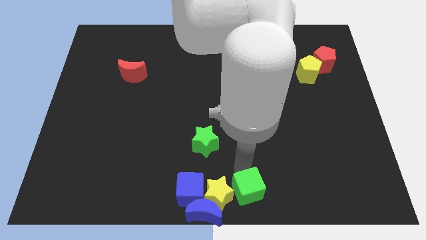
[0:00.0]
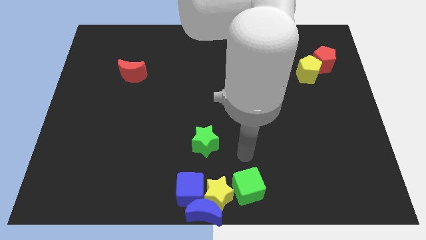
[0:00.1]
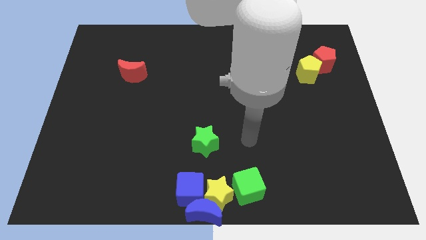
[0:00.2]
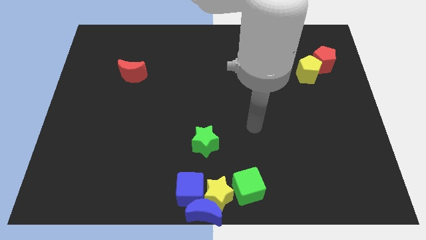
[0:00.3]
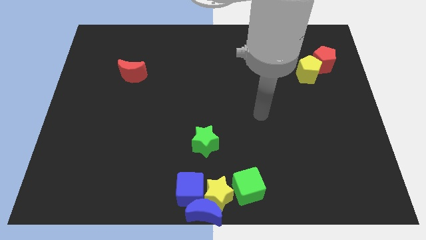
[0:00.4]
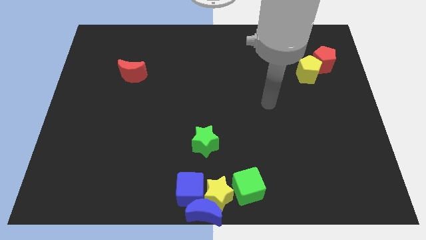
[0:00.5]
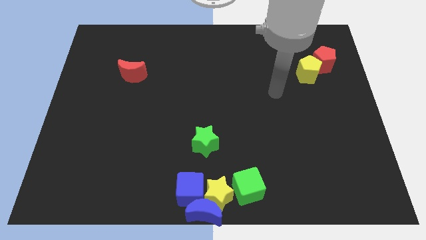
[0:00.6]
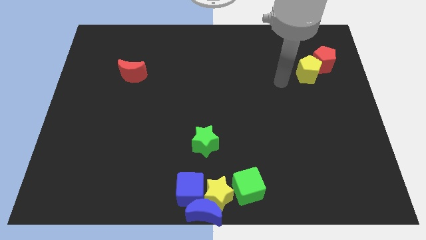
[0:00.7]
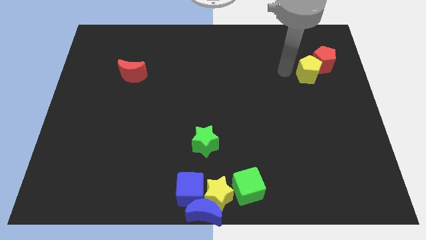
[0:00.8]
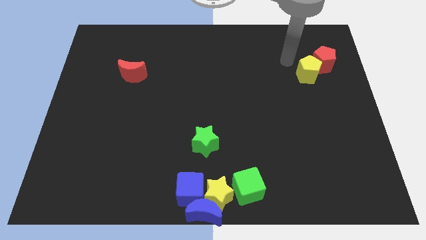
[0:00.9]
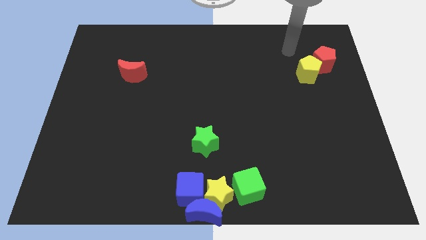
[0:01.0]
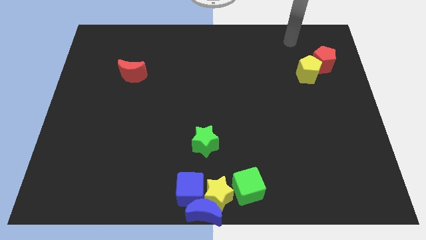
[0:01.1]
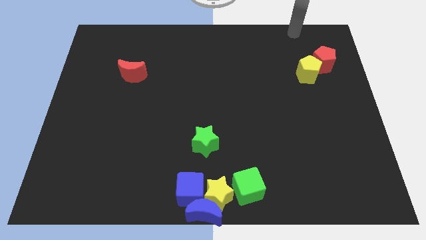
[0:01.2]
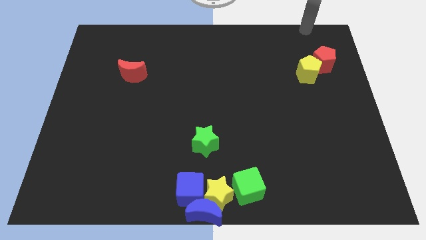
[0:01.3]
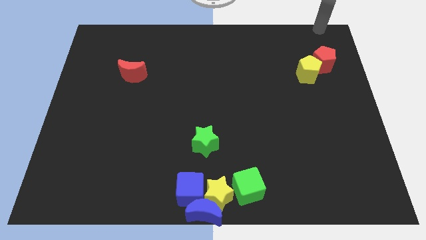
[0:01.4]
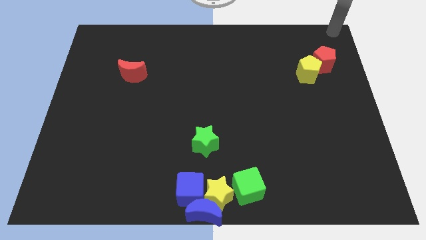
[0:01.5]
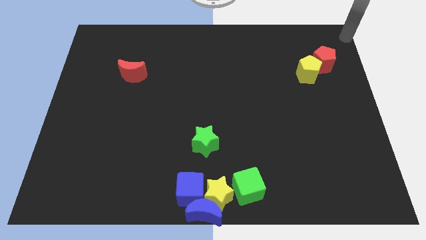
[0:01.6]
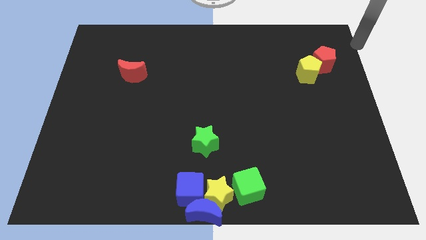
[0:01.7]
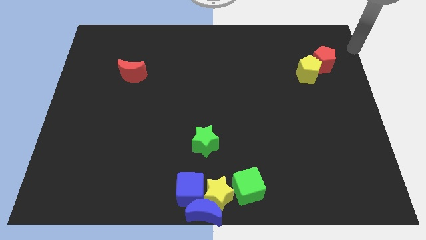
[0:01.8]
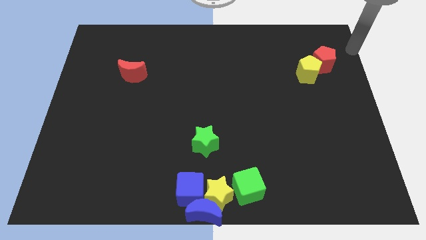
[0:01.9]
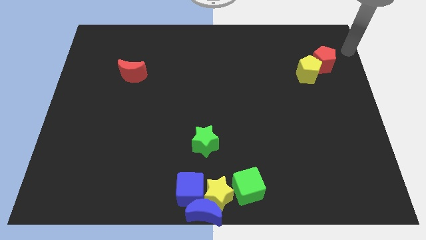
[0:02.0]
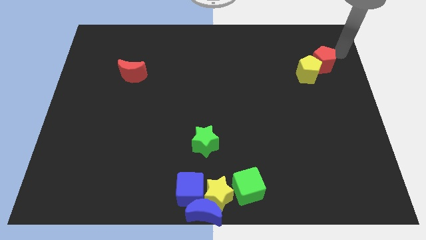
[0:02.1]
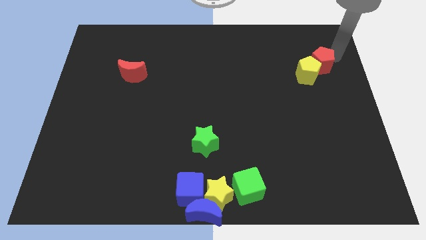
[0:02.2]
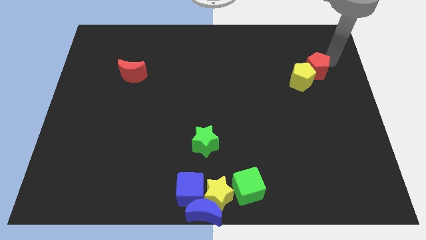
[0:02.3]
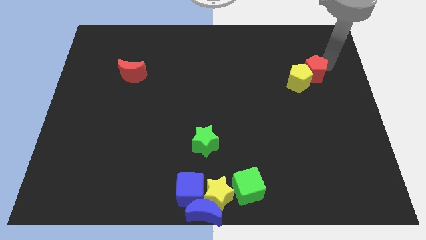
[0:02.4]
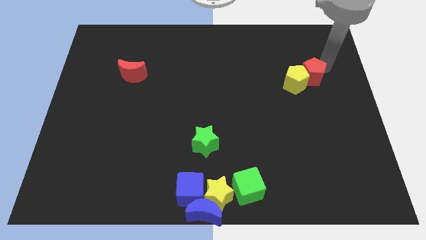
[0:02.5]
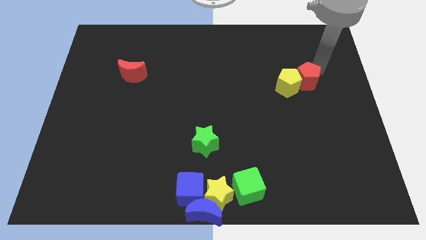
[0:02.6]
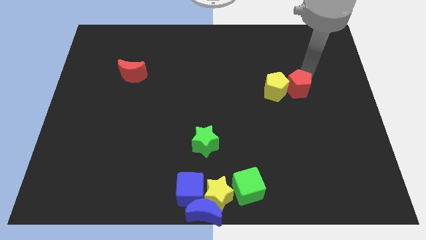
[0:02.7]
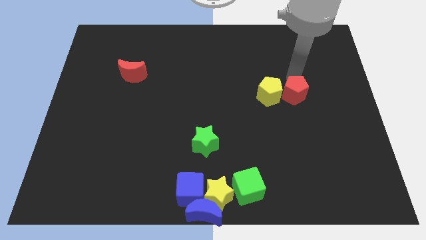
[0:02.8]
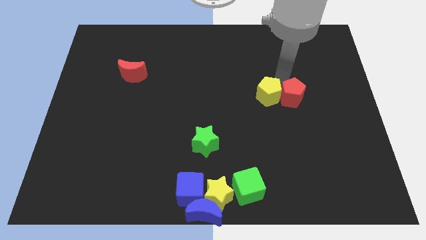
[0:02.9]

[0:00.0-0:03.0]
push the group of pentagons towards the other group of blocks

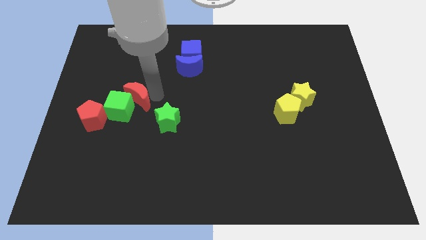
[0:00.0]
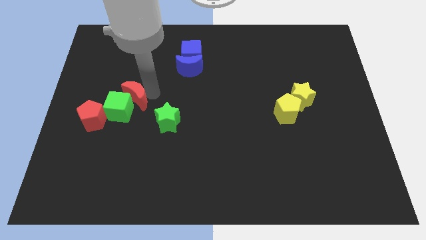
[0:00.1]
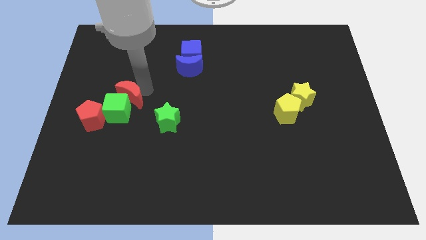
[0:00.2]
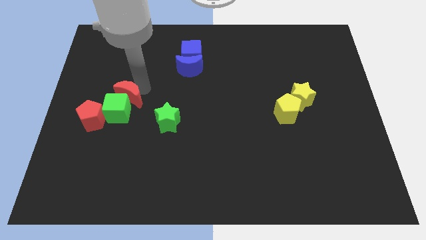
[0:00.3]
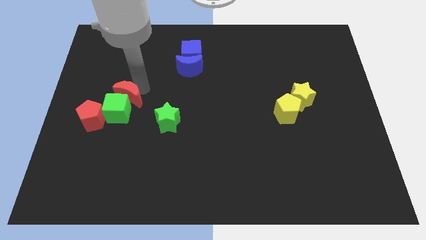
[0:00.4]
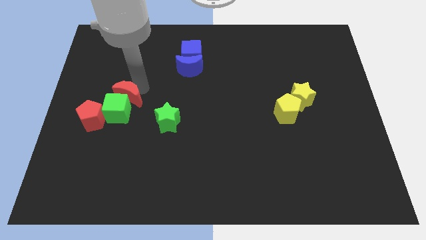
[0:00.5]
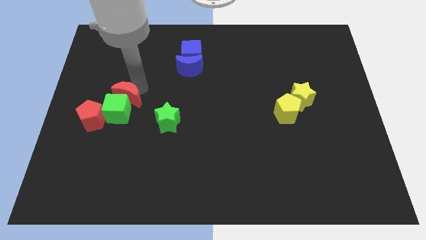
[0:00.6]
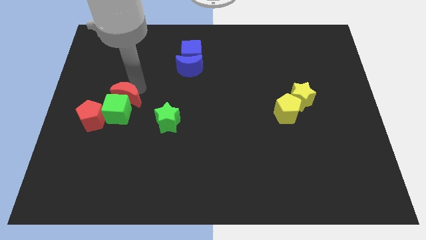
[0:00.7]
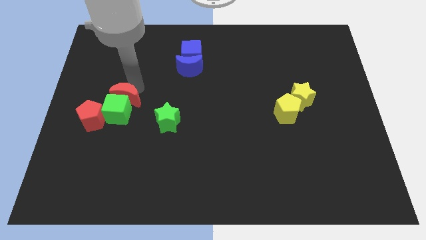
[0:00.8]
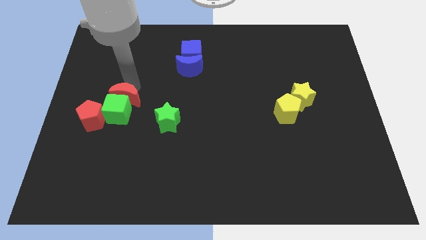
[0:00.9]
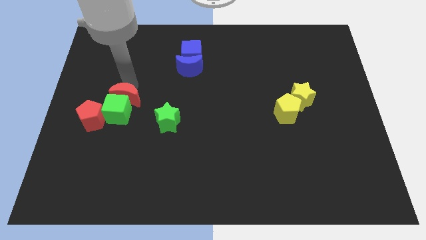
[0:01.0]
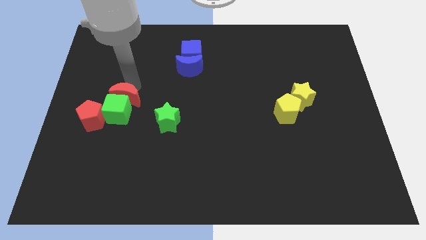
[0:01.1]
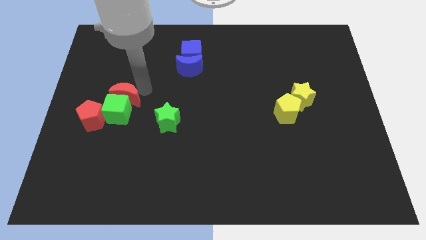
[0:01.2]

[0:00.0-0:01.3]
place red moon above green cube

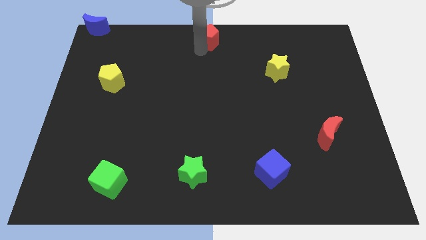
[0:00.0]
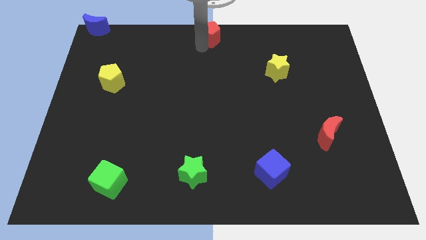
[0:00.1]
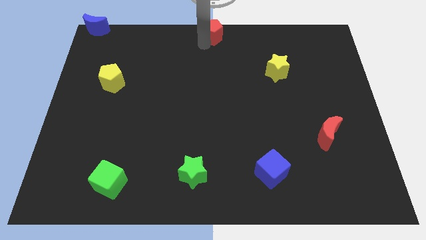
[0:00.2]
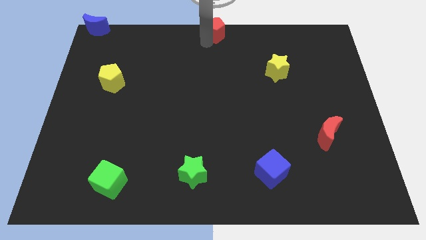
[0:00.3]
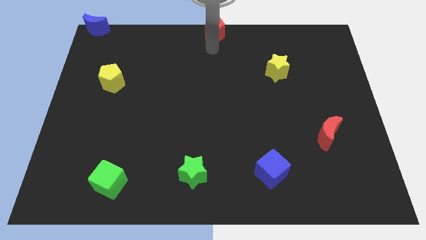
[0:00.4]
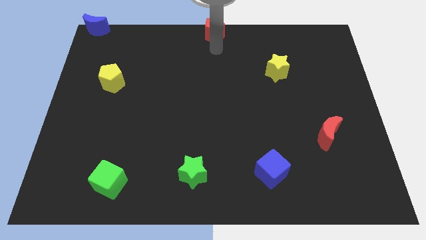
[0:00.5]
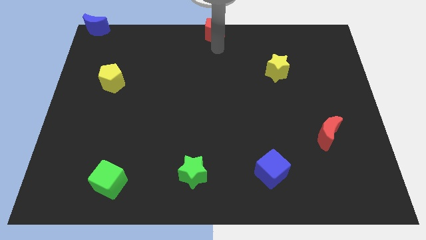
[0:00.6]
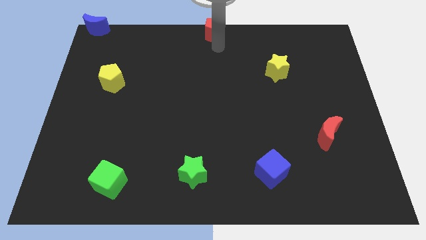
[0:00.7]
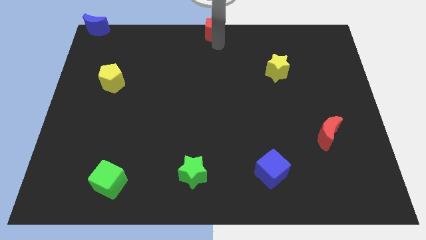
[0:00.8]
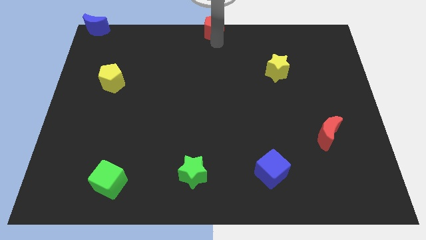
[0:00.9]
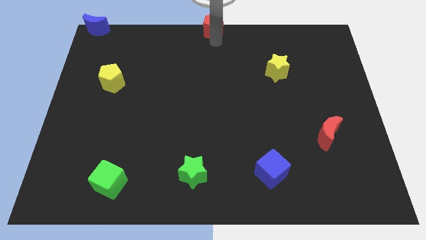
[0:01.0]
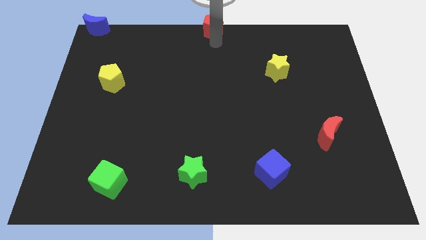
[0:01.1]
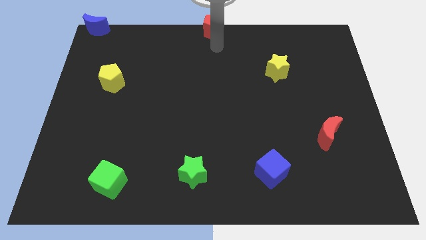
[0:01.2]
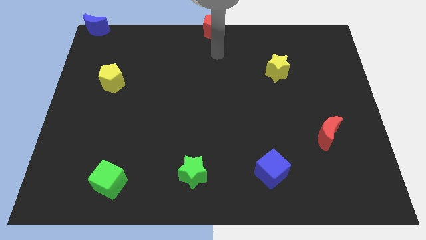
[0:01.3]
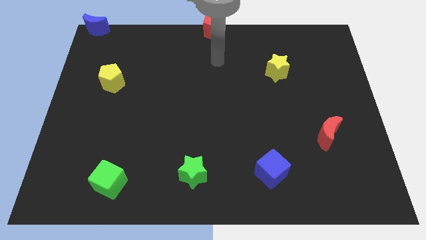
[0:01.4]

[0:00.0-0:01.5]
slightly push the red pentagon to the top center

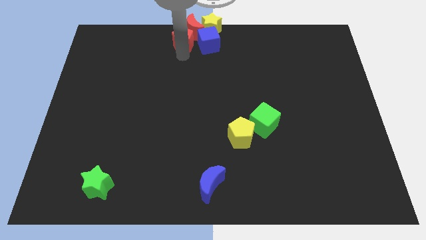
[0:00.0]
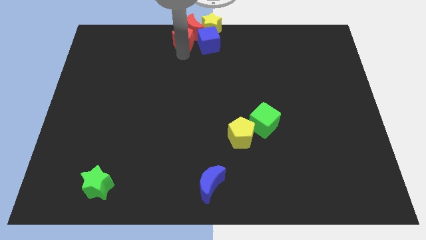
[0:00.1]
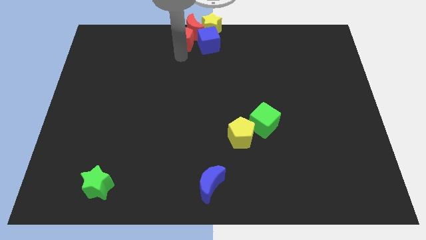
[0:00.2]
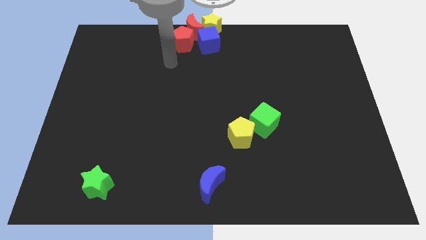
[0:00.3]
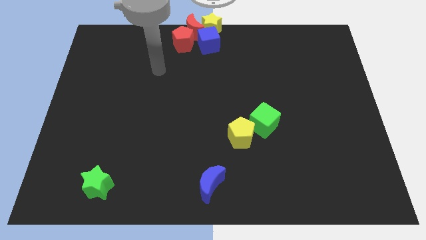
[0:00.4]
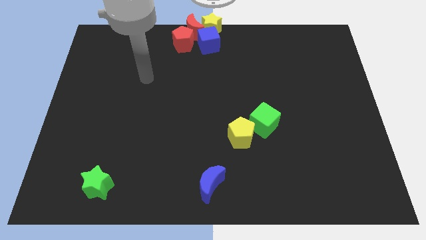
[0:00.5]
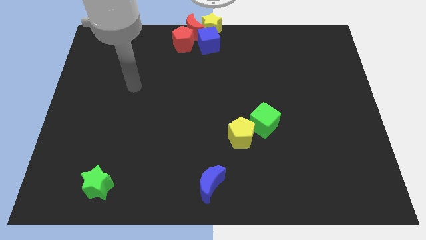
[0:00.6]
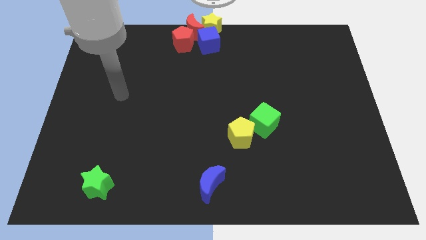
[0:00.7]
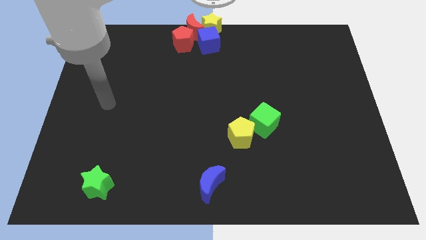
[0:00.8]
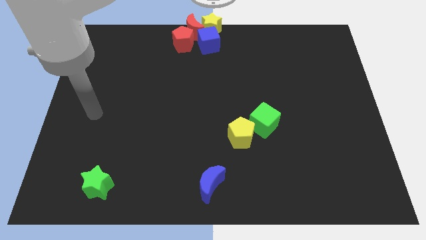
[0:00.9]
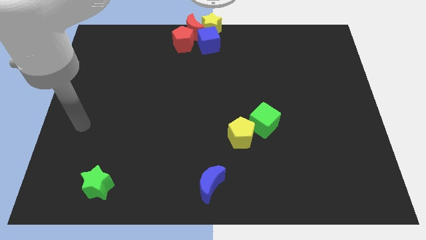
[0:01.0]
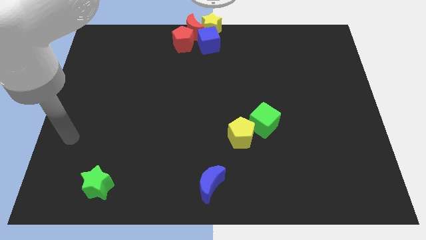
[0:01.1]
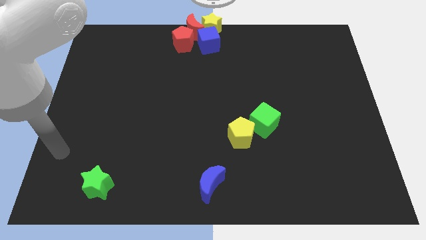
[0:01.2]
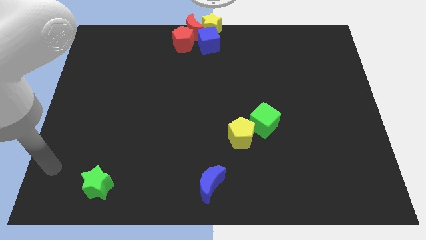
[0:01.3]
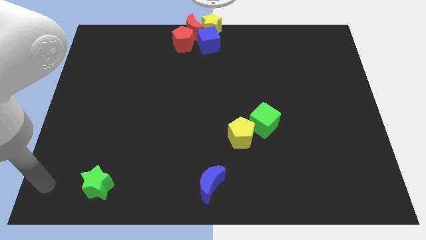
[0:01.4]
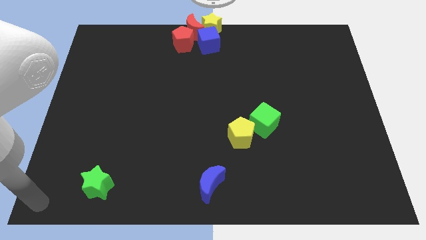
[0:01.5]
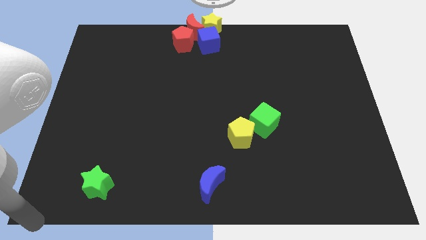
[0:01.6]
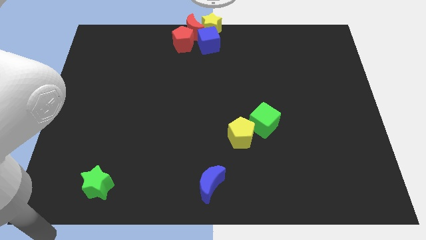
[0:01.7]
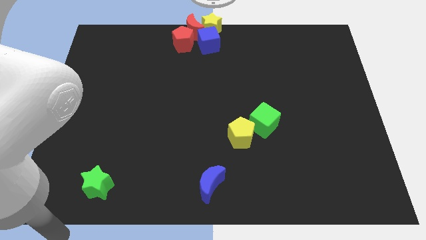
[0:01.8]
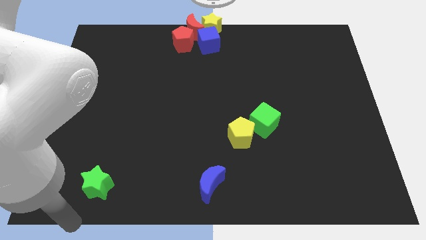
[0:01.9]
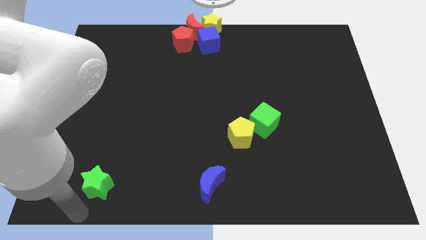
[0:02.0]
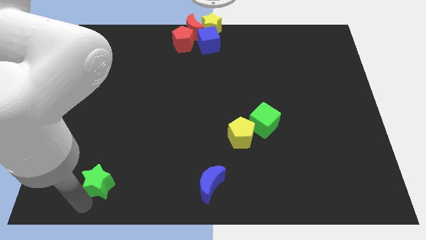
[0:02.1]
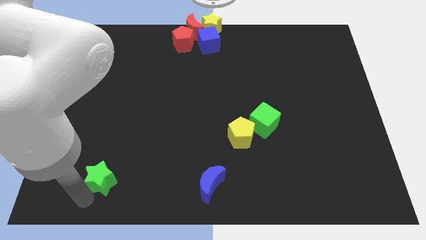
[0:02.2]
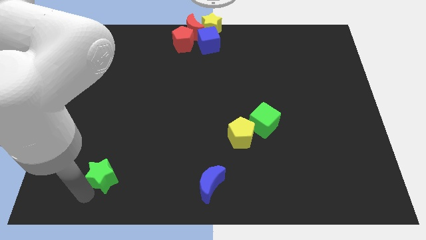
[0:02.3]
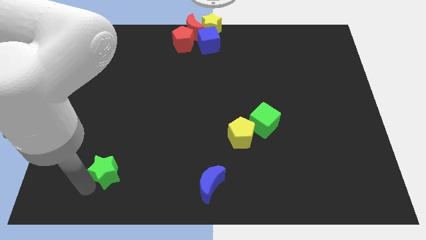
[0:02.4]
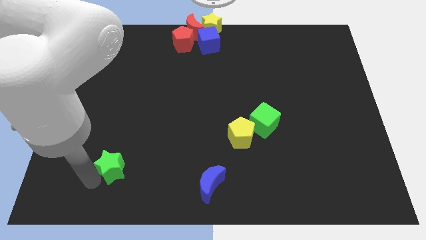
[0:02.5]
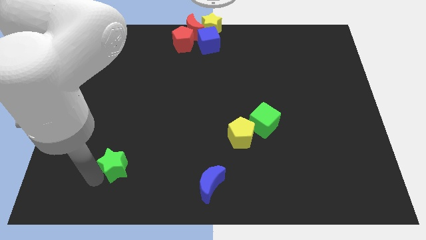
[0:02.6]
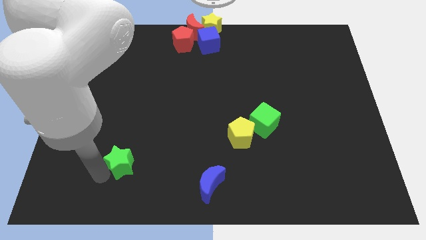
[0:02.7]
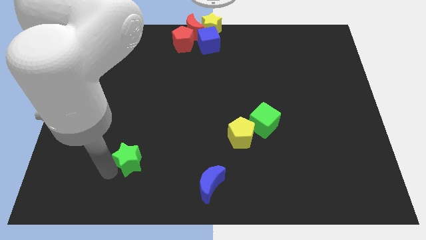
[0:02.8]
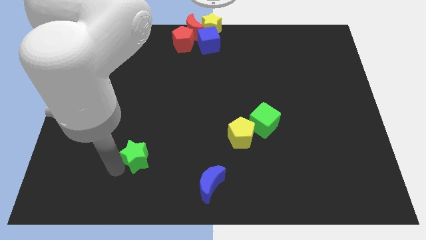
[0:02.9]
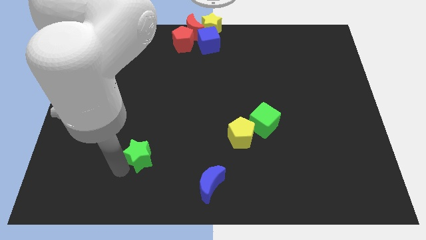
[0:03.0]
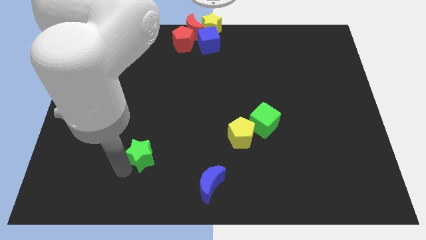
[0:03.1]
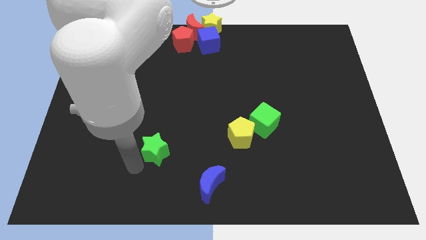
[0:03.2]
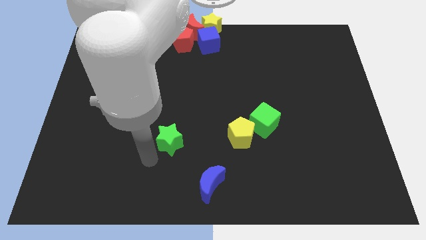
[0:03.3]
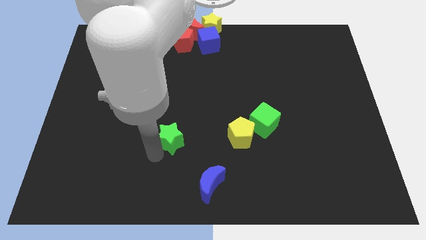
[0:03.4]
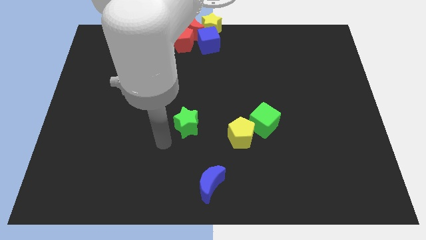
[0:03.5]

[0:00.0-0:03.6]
move the arm away from the red pentagon
